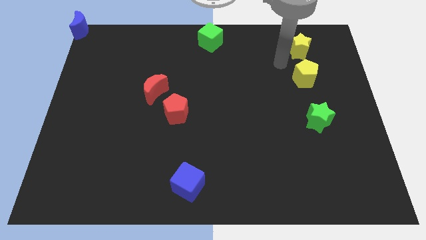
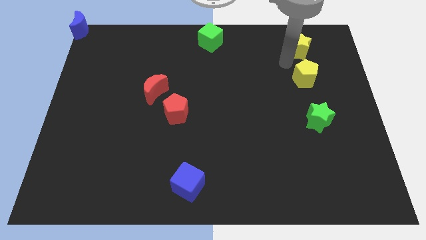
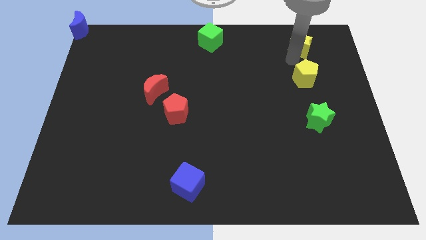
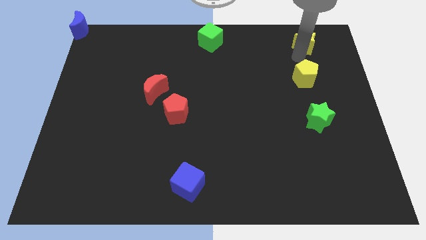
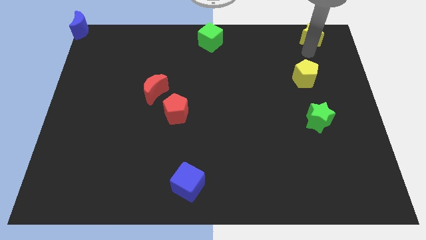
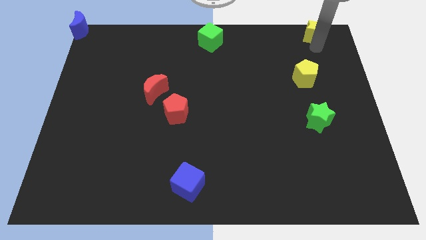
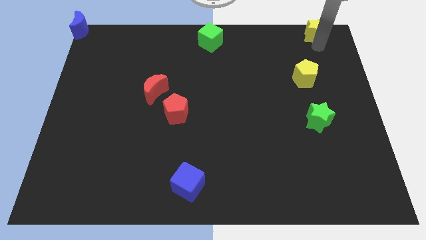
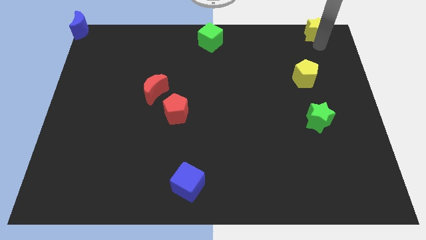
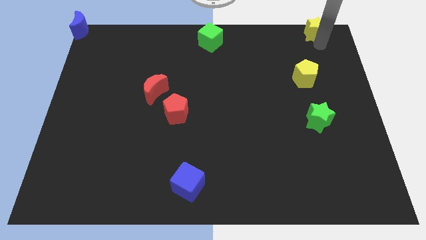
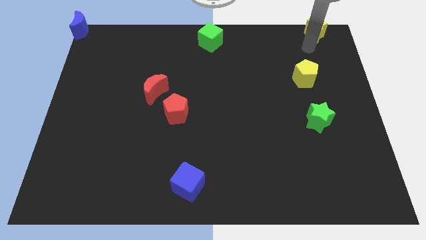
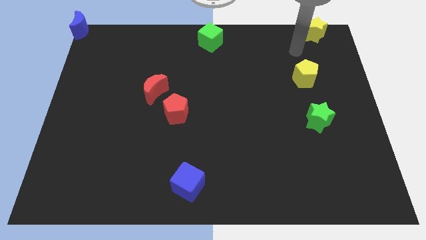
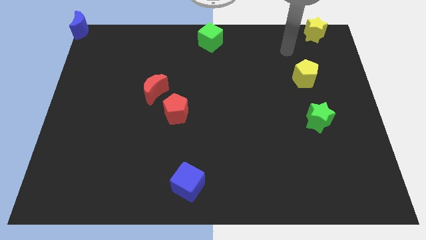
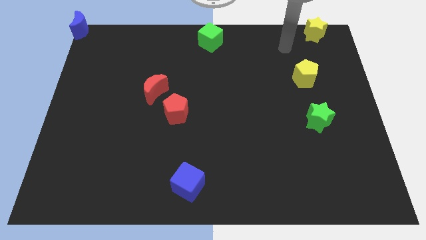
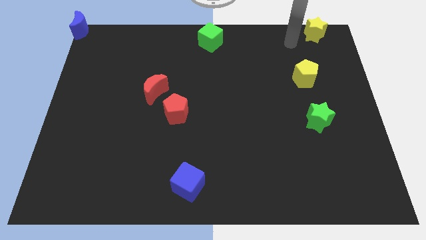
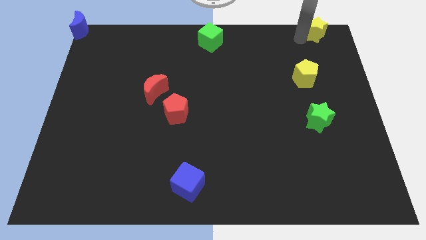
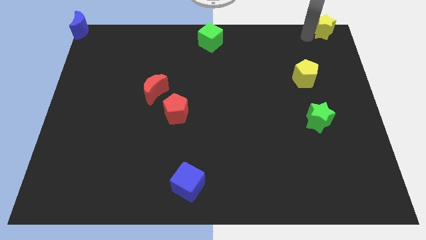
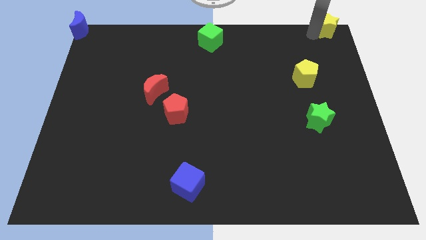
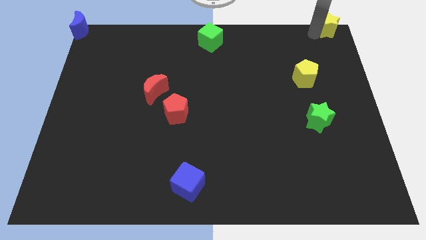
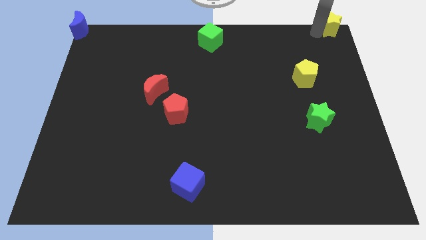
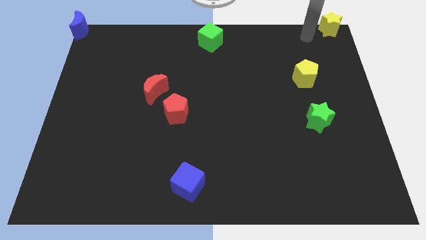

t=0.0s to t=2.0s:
move the yellow star to the top right corner

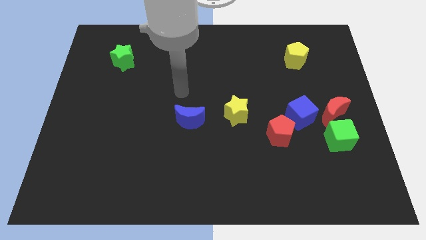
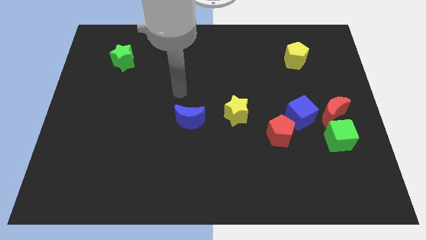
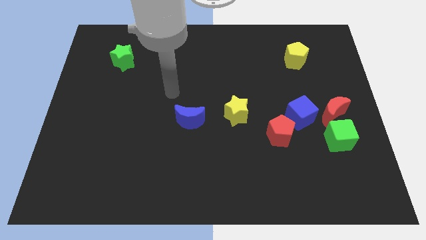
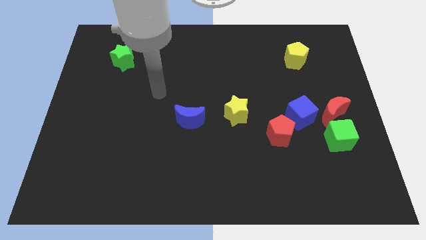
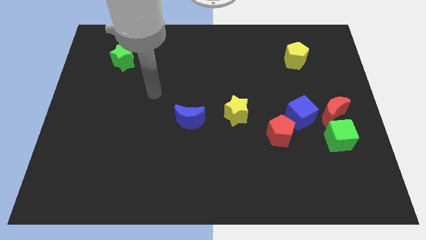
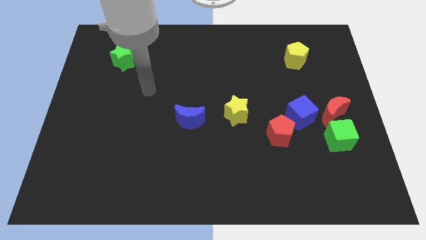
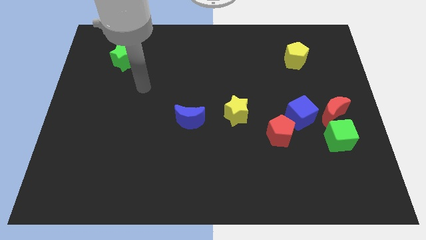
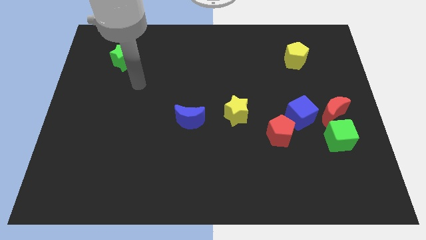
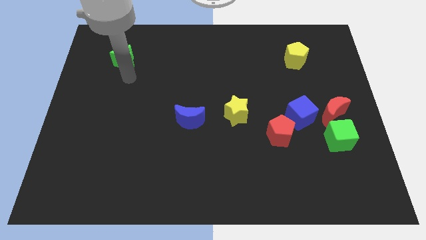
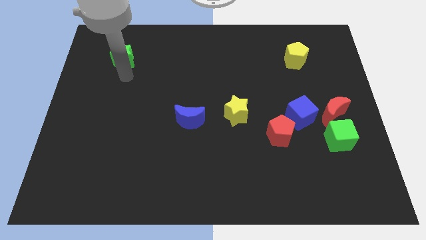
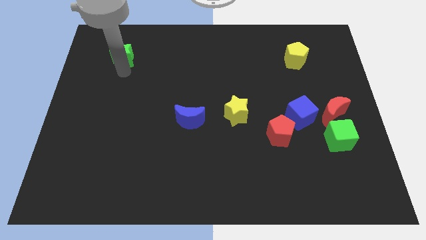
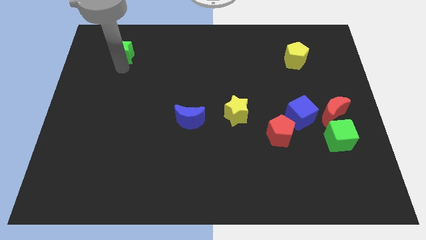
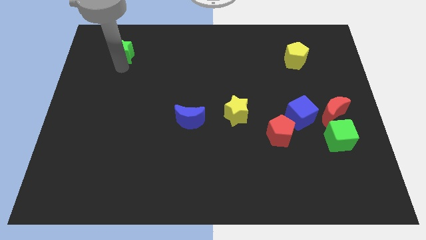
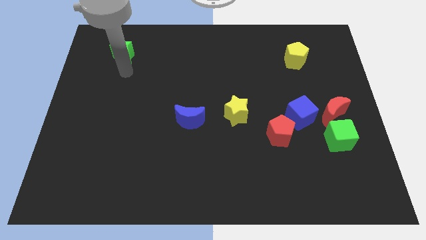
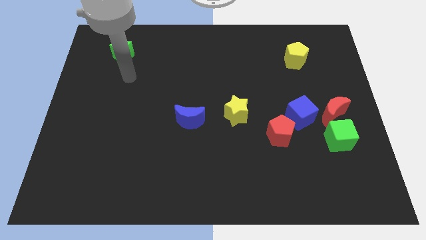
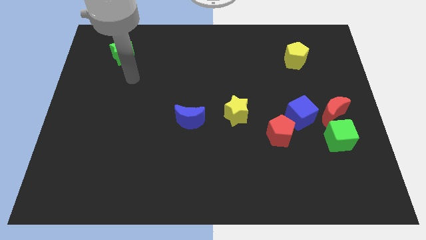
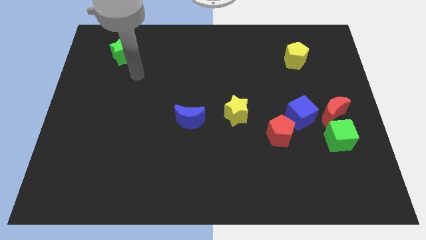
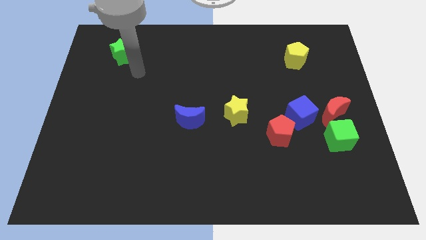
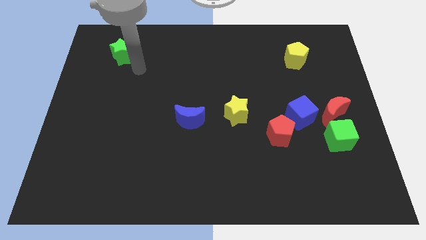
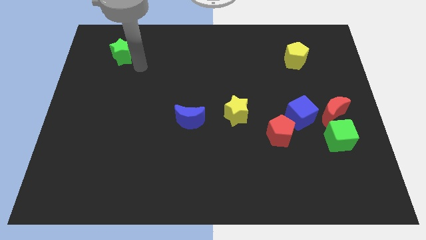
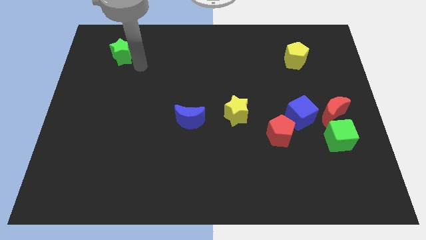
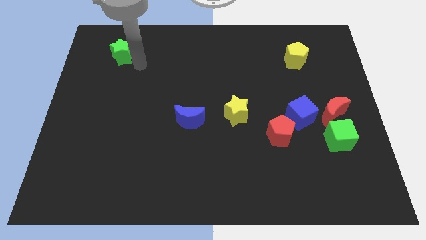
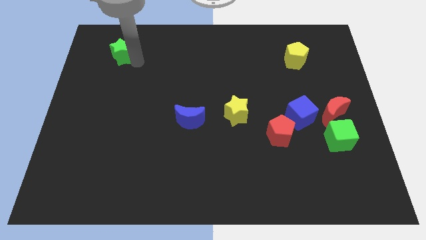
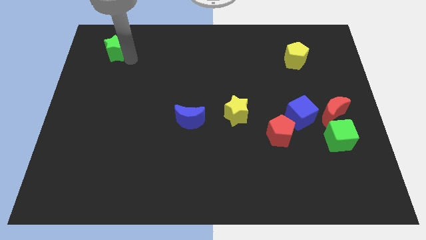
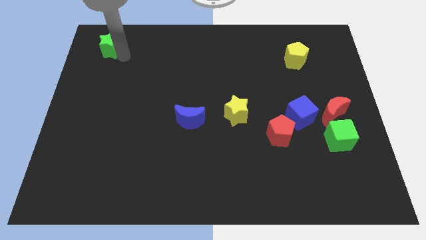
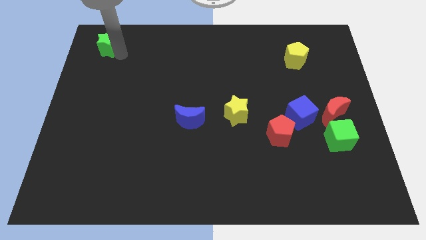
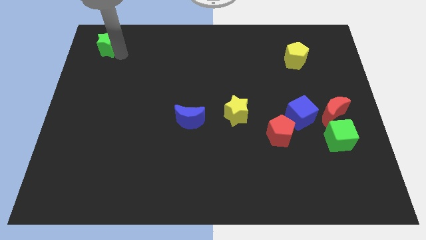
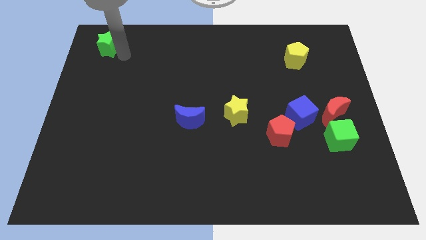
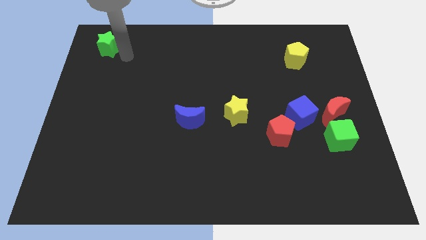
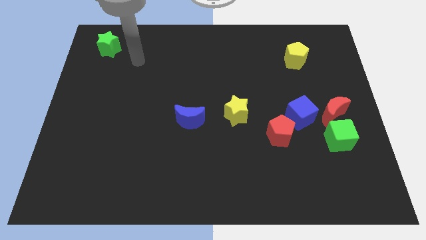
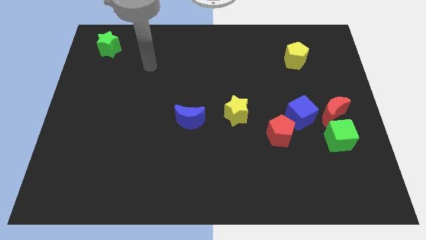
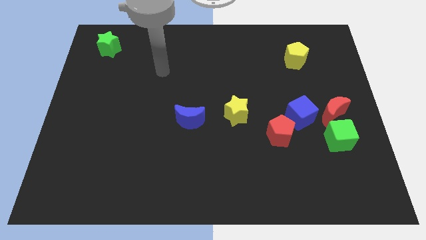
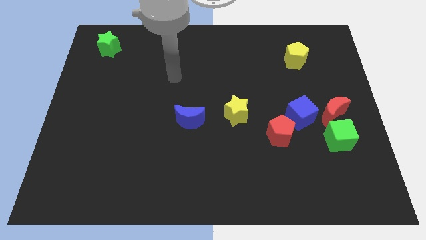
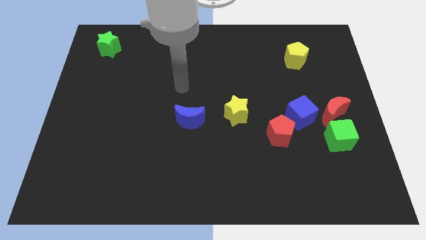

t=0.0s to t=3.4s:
move the green star to the top left

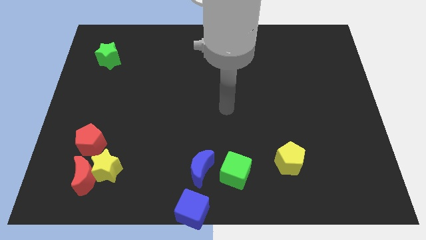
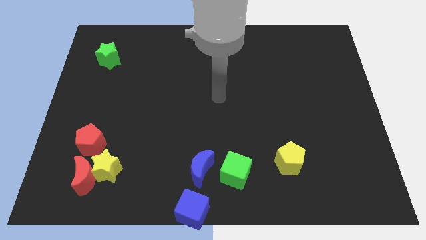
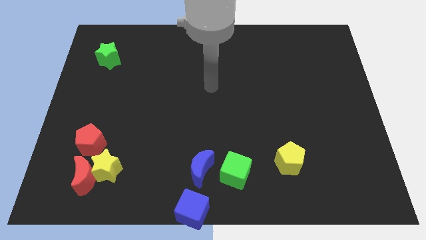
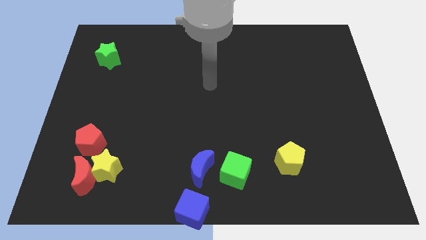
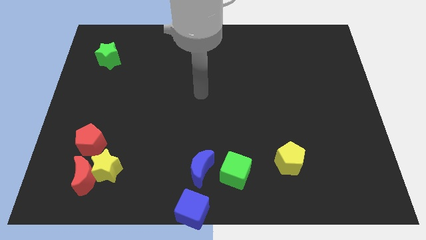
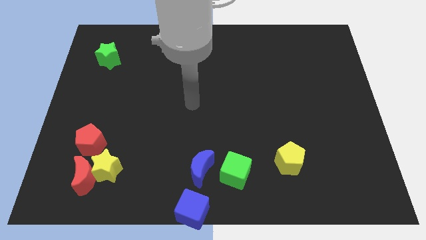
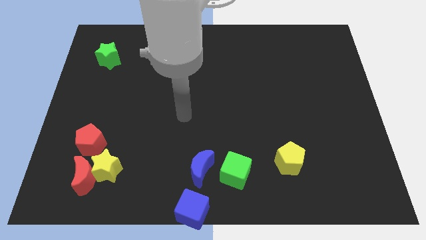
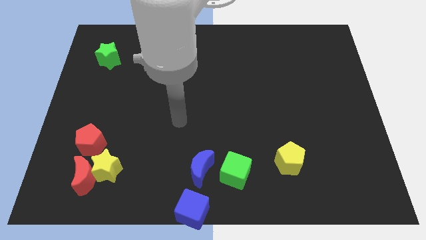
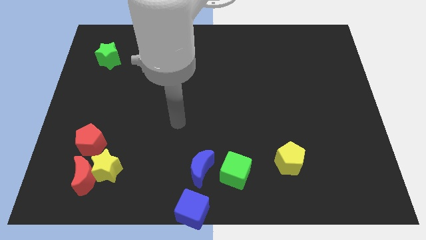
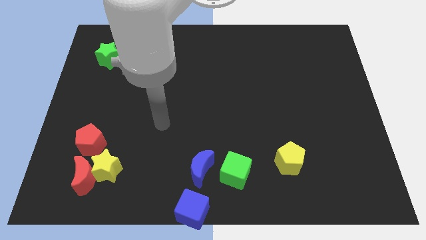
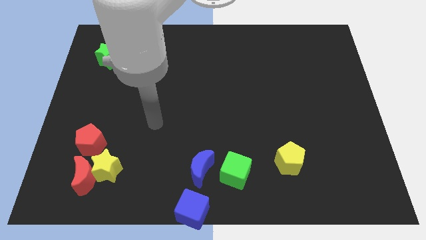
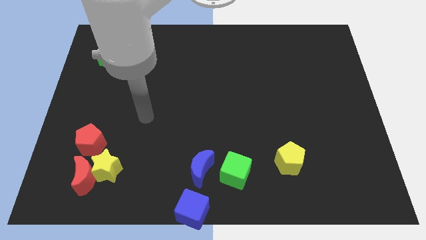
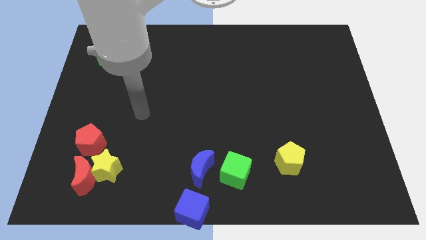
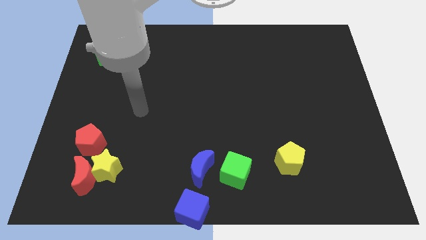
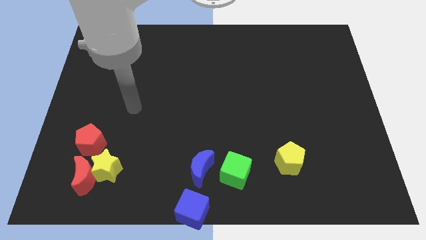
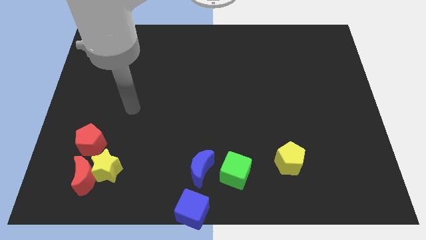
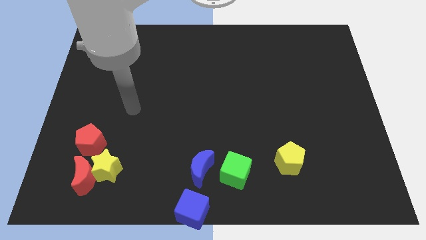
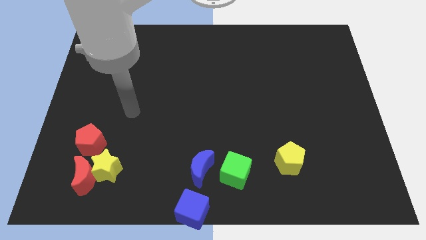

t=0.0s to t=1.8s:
move your arm diagonally to the top right of the red pentagon

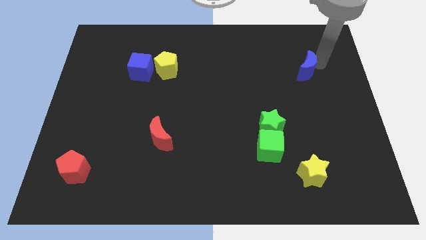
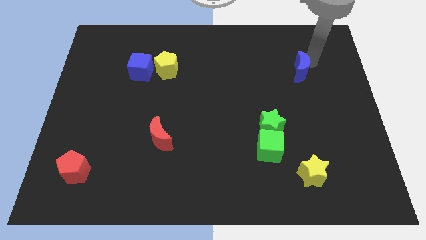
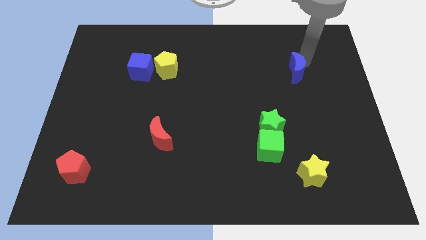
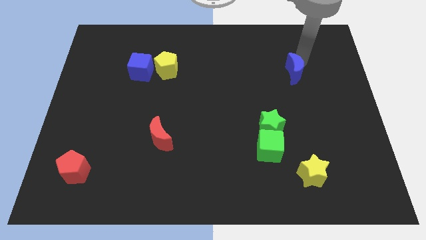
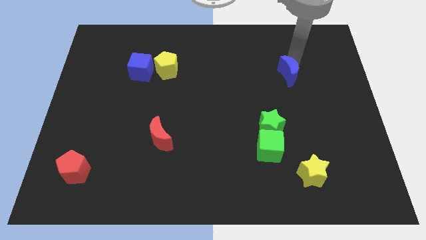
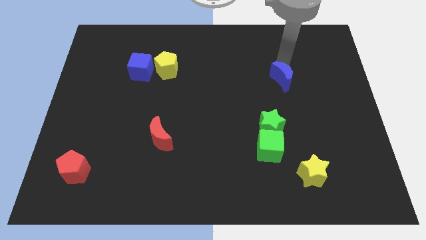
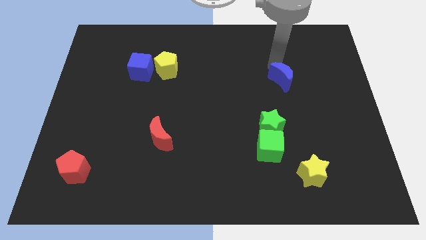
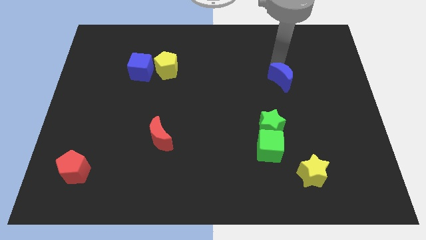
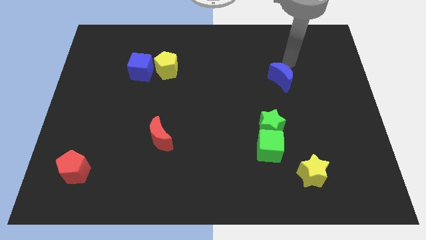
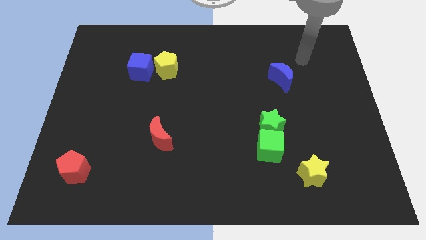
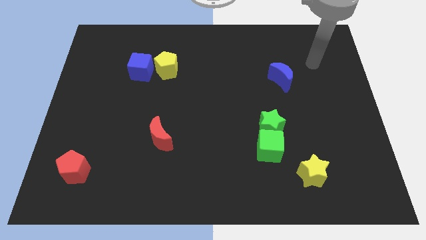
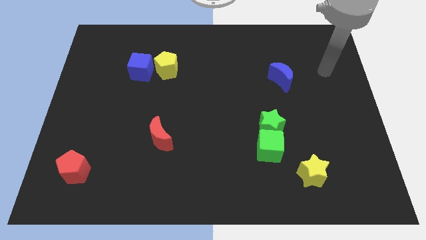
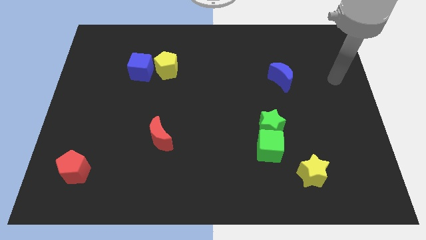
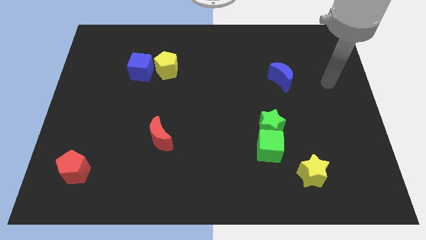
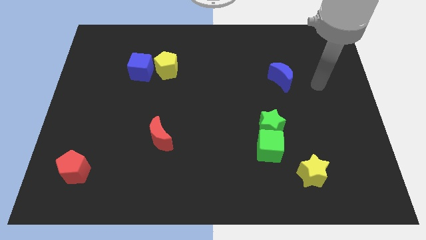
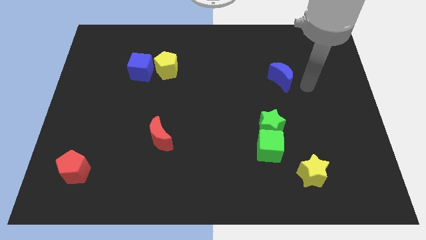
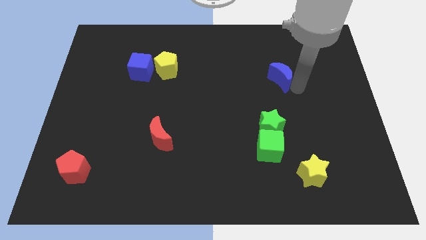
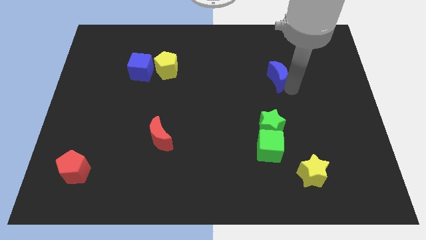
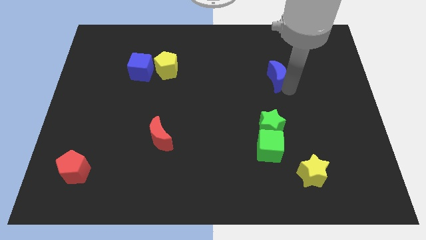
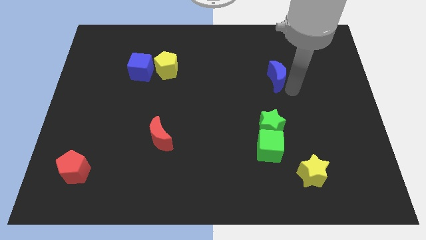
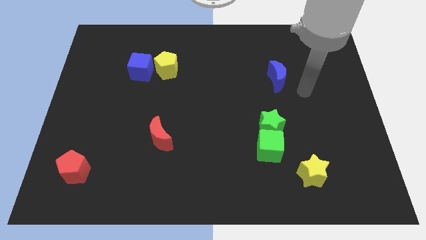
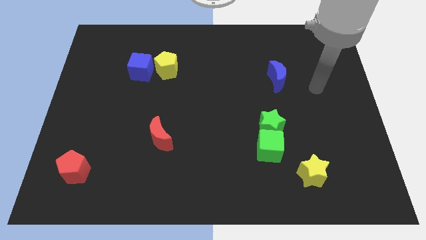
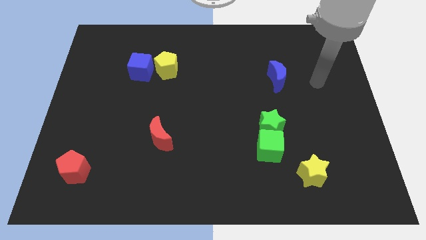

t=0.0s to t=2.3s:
push the blue crescent at the top side of the group of green blocks
